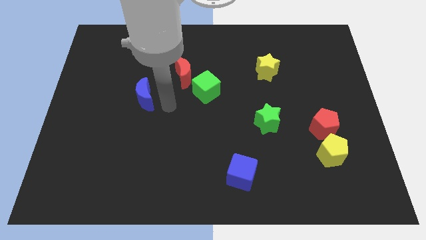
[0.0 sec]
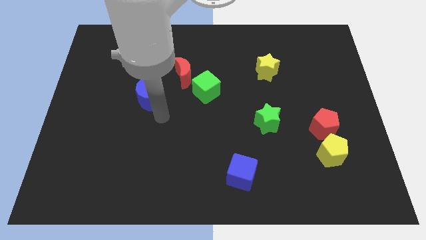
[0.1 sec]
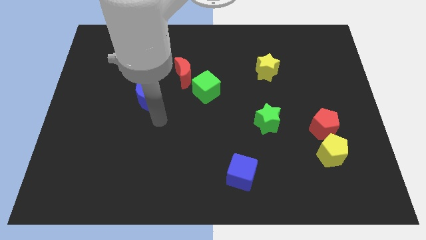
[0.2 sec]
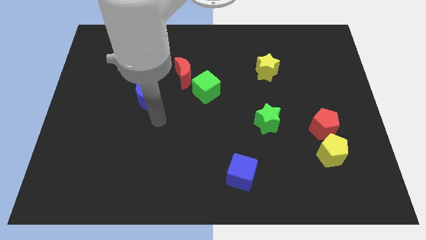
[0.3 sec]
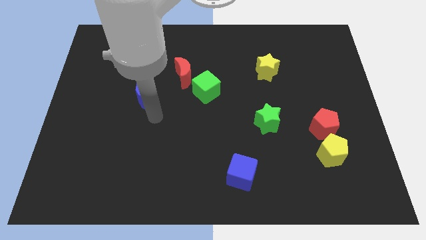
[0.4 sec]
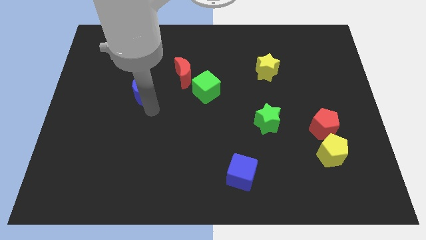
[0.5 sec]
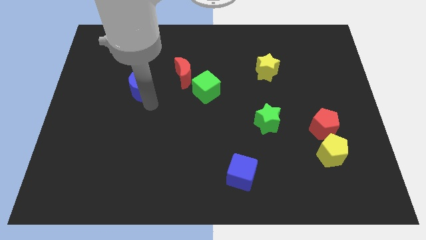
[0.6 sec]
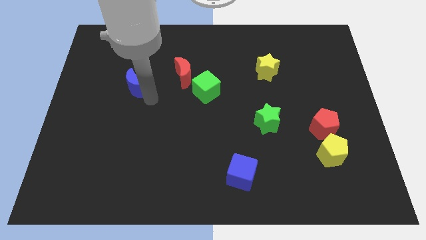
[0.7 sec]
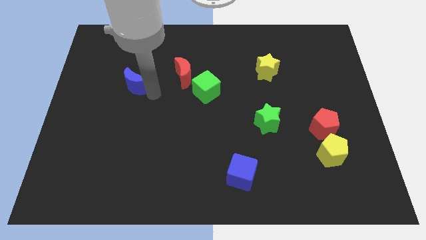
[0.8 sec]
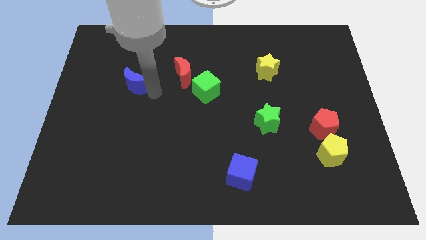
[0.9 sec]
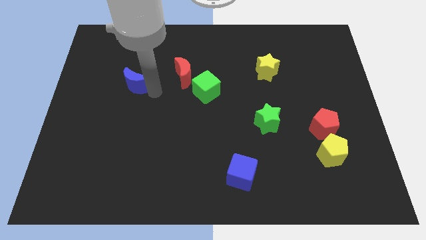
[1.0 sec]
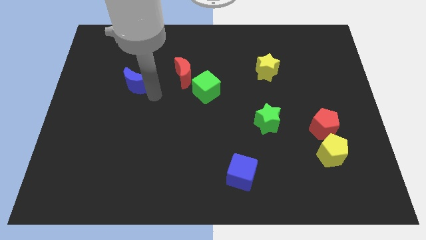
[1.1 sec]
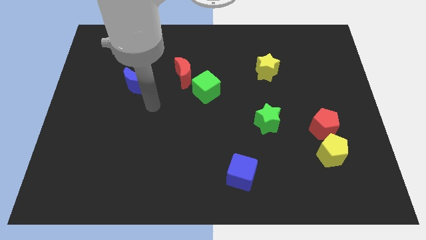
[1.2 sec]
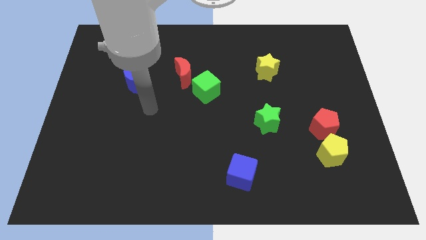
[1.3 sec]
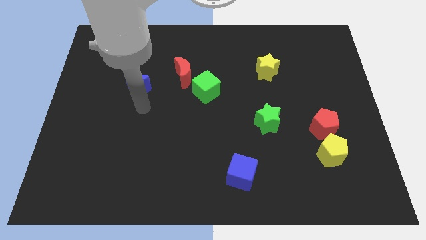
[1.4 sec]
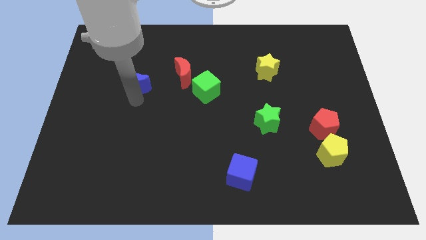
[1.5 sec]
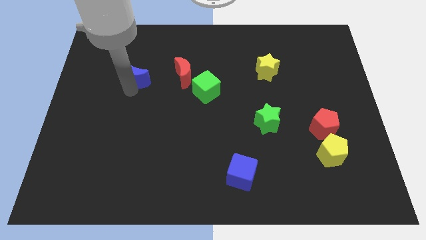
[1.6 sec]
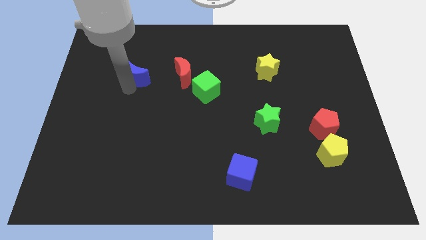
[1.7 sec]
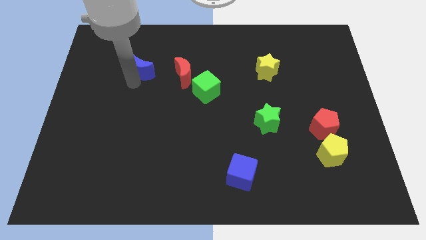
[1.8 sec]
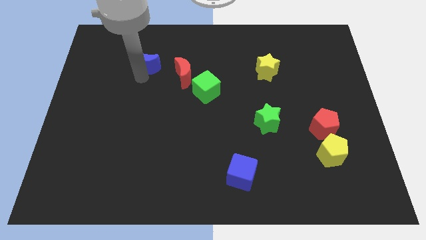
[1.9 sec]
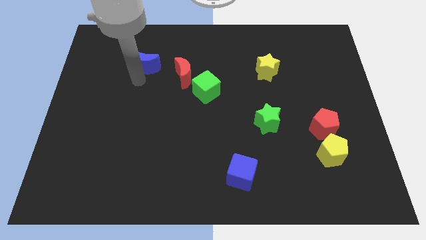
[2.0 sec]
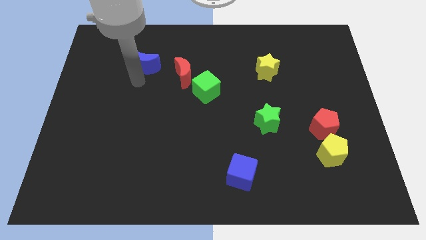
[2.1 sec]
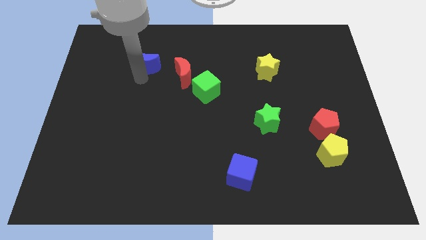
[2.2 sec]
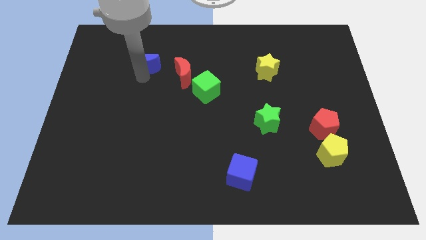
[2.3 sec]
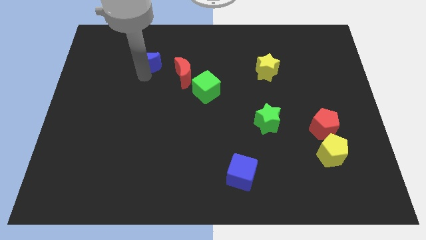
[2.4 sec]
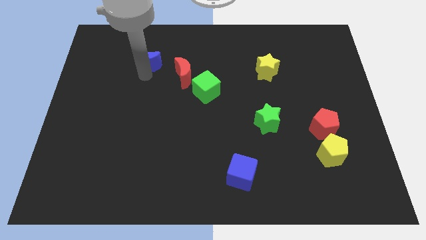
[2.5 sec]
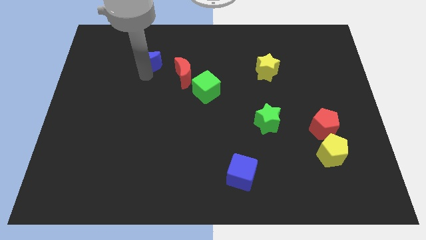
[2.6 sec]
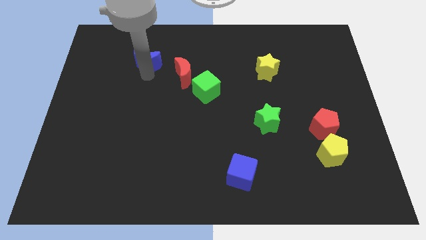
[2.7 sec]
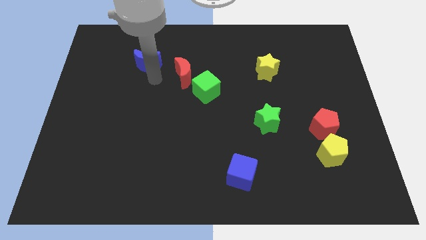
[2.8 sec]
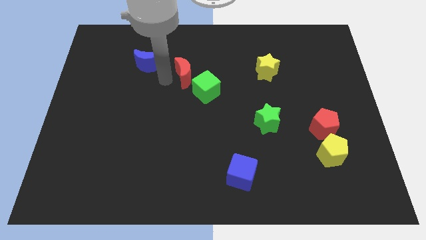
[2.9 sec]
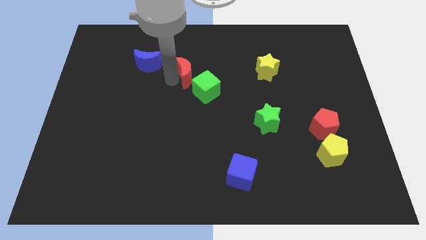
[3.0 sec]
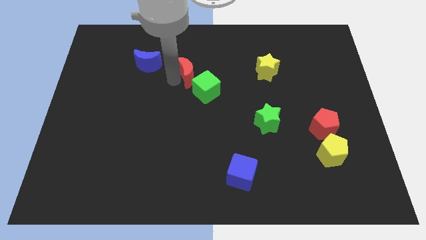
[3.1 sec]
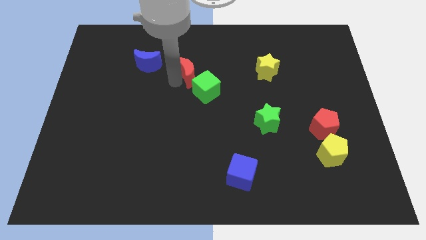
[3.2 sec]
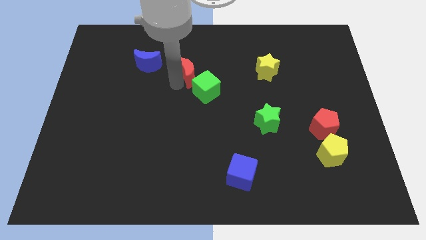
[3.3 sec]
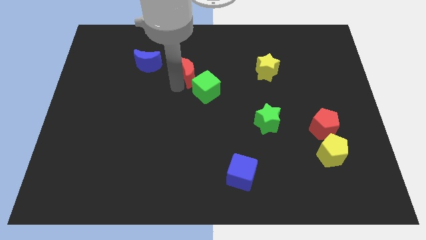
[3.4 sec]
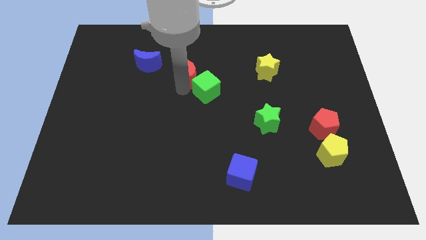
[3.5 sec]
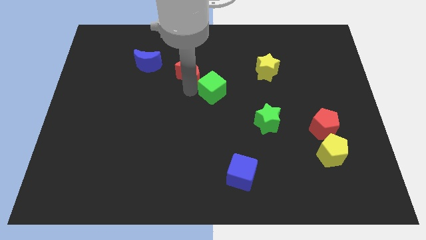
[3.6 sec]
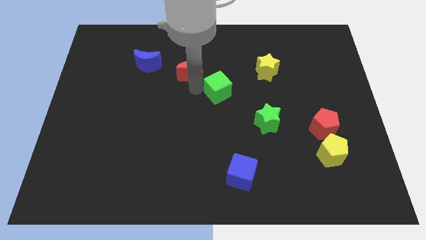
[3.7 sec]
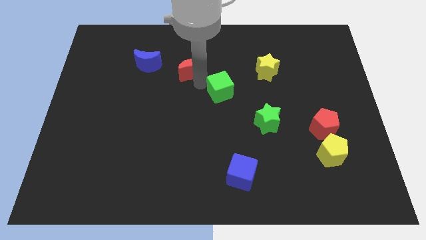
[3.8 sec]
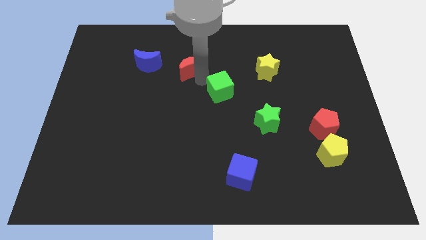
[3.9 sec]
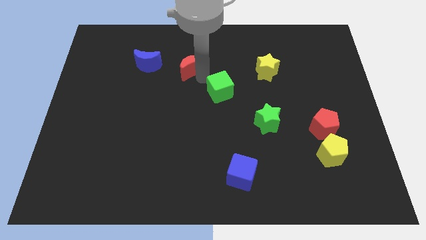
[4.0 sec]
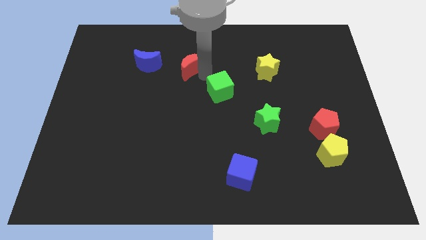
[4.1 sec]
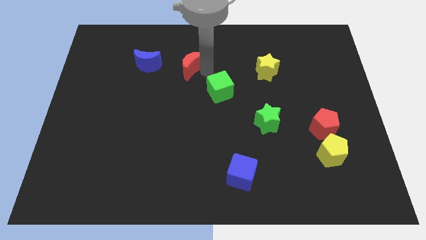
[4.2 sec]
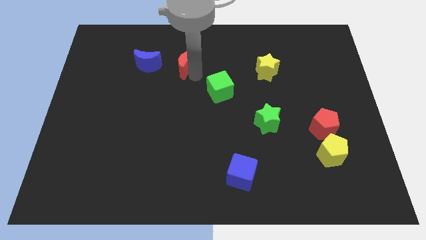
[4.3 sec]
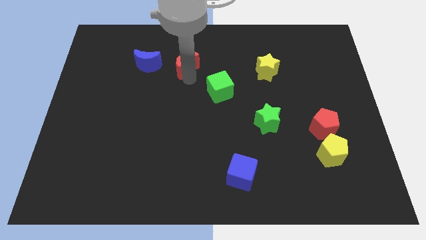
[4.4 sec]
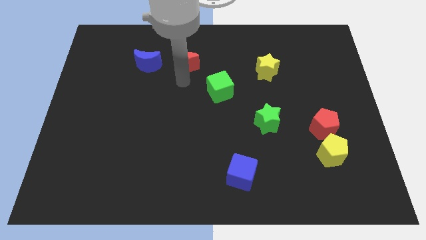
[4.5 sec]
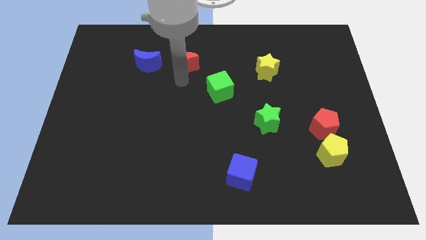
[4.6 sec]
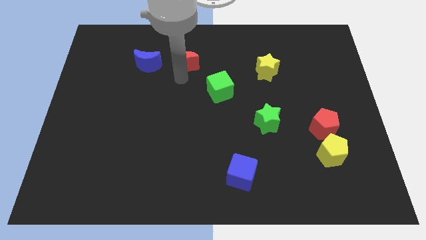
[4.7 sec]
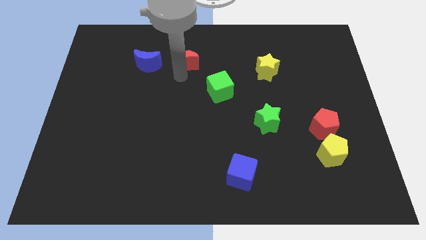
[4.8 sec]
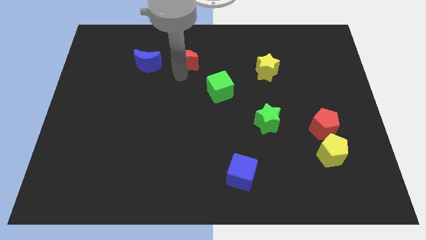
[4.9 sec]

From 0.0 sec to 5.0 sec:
place blue and red crescents in a horizontal line

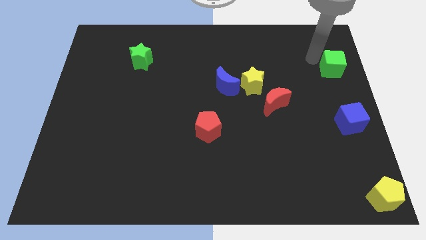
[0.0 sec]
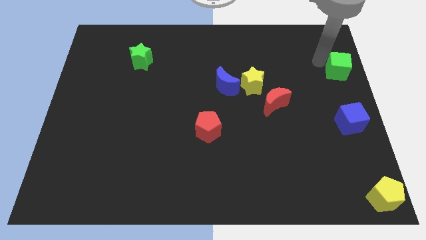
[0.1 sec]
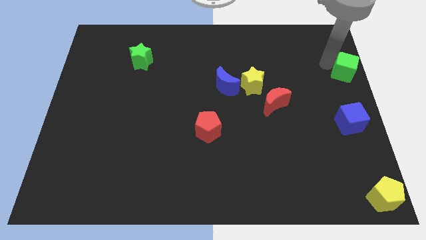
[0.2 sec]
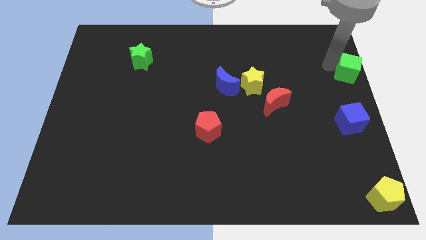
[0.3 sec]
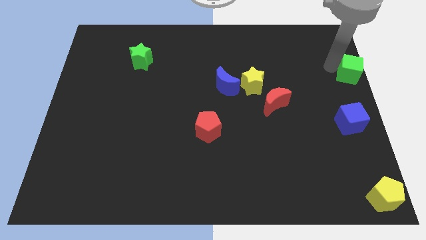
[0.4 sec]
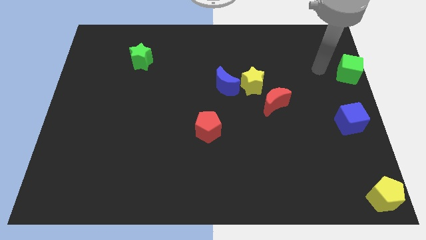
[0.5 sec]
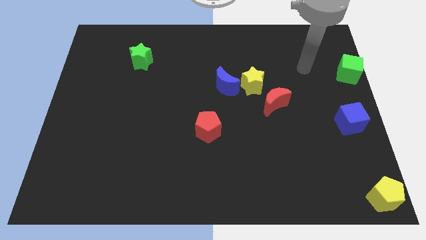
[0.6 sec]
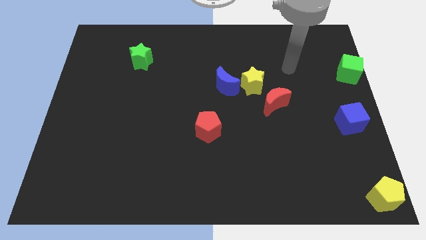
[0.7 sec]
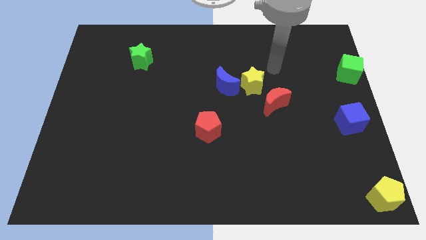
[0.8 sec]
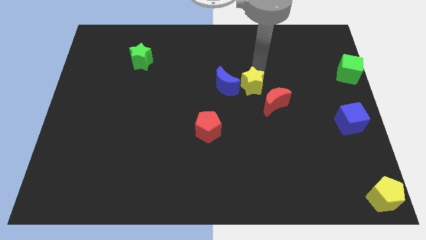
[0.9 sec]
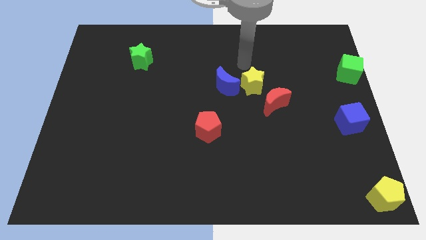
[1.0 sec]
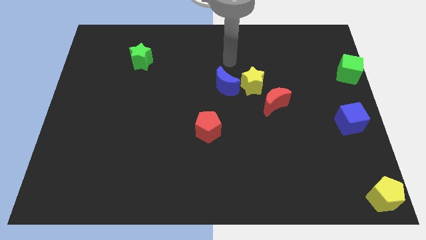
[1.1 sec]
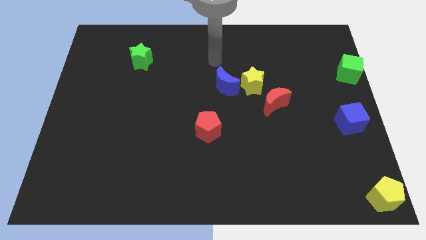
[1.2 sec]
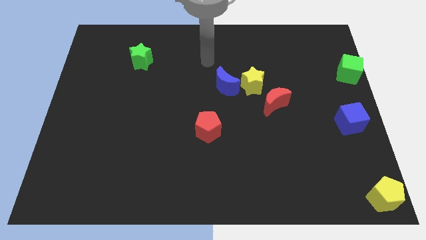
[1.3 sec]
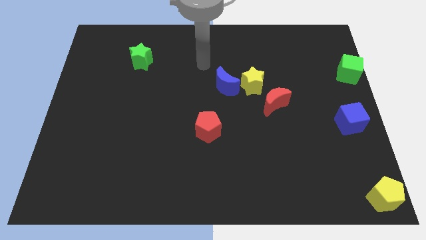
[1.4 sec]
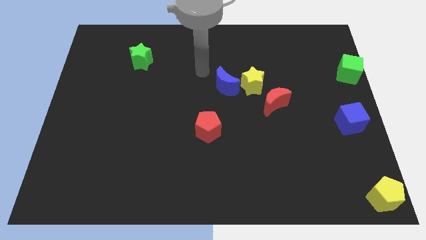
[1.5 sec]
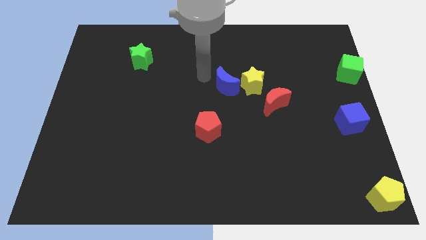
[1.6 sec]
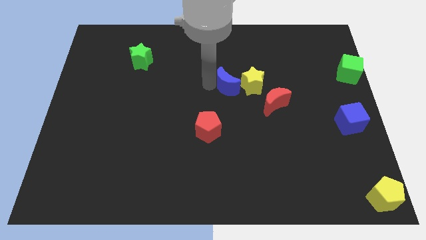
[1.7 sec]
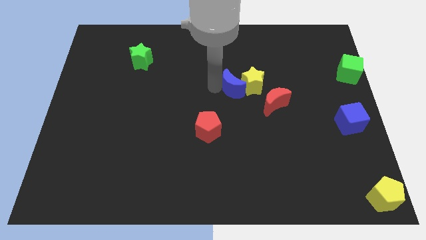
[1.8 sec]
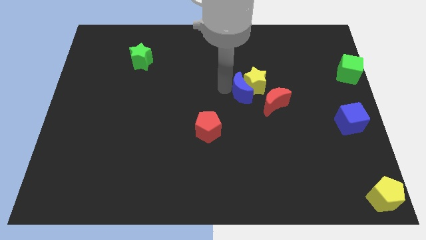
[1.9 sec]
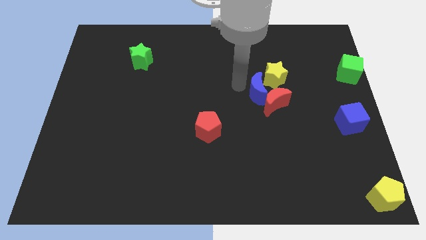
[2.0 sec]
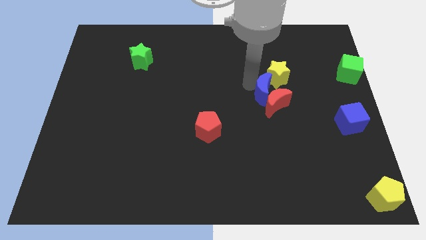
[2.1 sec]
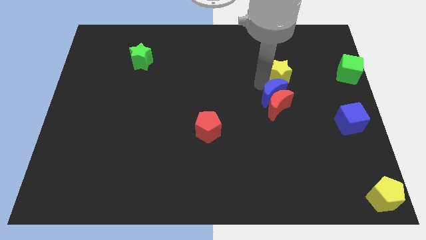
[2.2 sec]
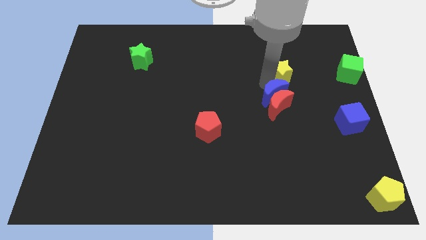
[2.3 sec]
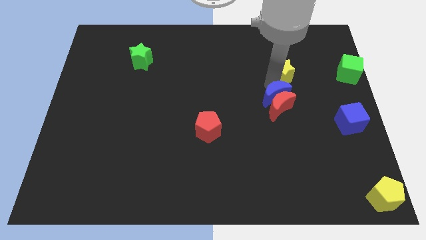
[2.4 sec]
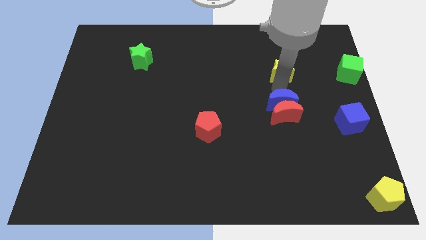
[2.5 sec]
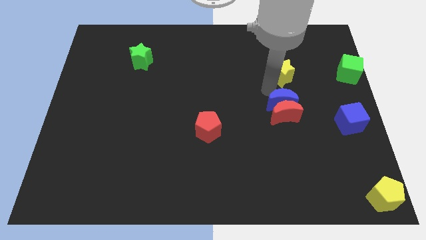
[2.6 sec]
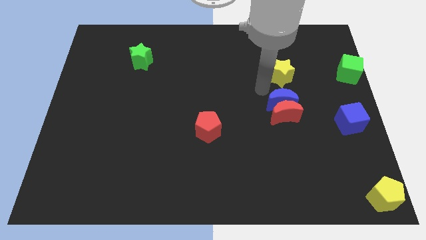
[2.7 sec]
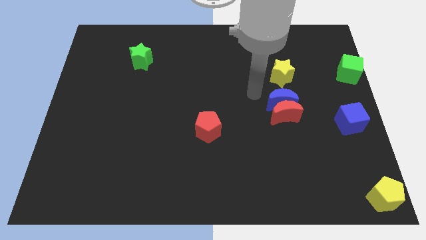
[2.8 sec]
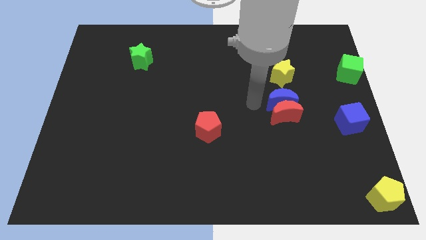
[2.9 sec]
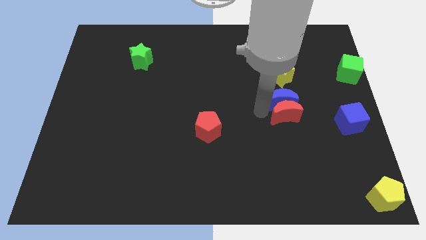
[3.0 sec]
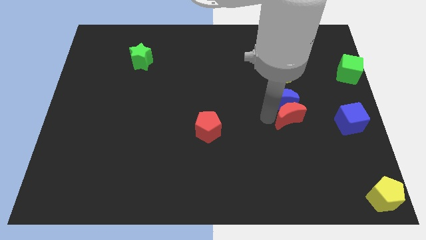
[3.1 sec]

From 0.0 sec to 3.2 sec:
move the blue crescent to the top of red crescent

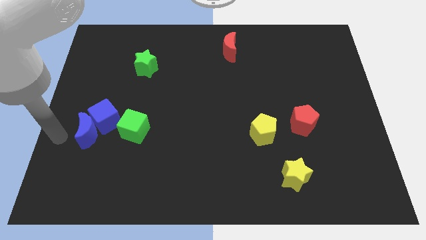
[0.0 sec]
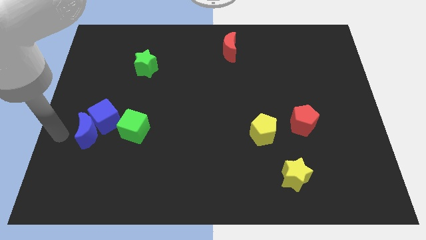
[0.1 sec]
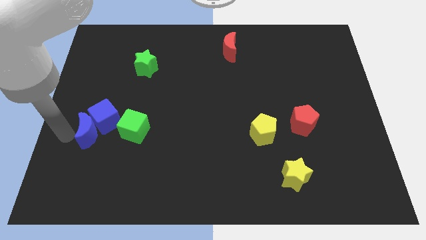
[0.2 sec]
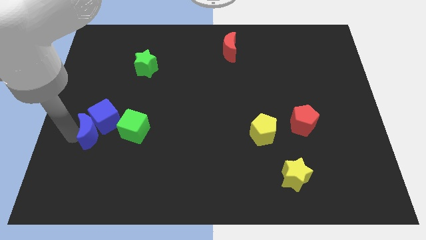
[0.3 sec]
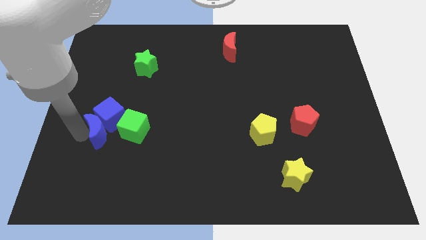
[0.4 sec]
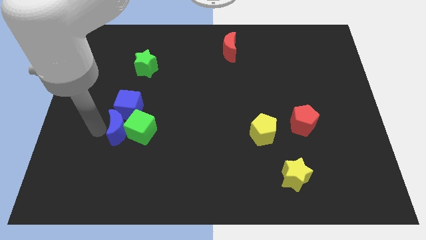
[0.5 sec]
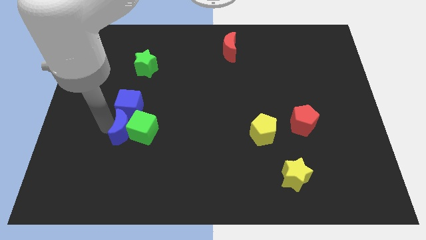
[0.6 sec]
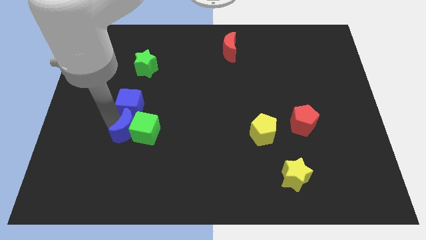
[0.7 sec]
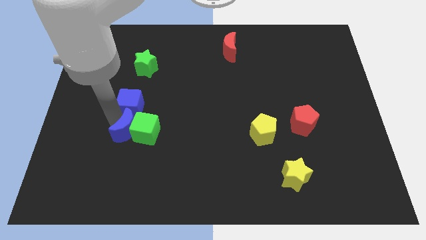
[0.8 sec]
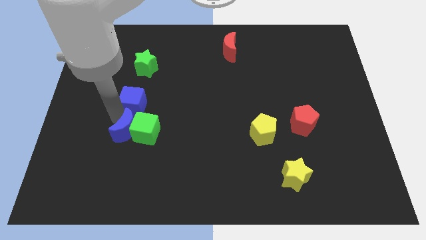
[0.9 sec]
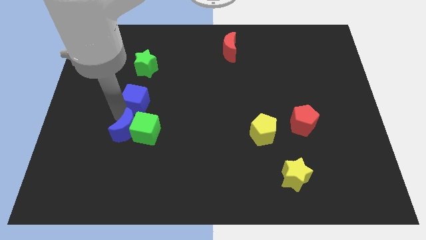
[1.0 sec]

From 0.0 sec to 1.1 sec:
push the blue moon into the green cube
